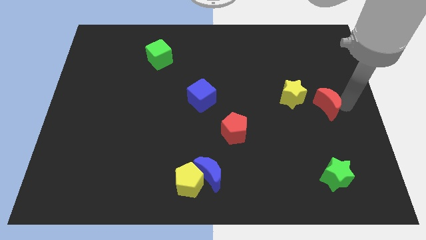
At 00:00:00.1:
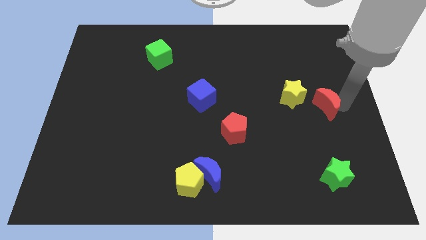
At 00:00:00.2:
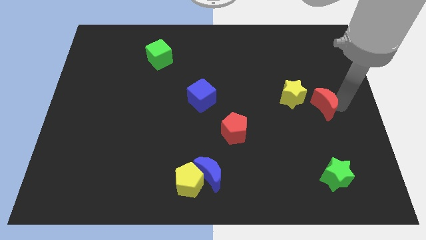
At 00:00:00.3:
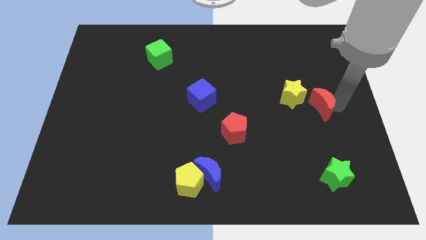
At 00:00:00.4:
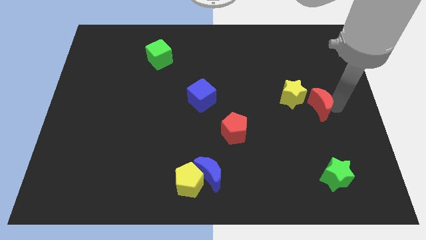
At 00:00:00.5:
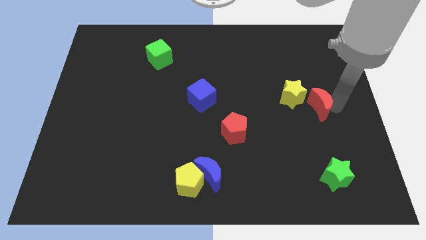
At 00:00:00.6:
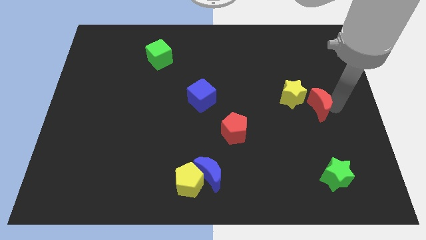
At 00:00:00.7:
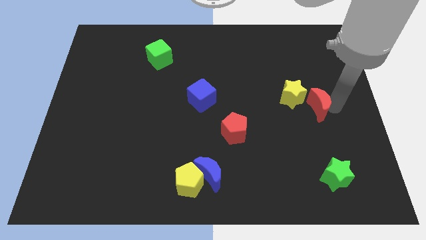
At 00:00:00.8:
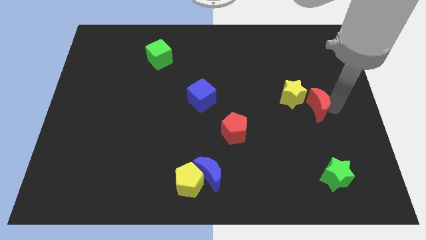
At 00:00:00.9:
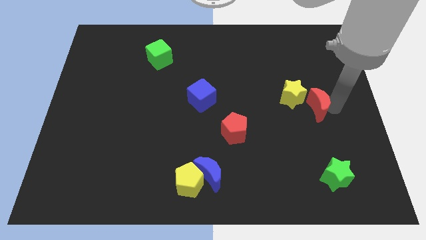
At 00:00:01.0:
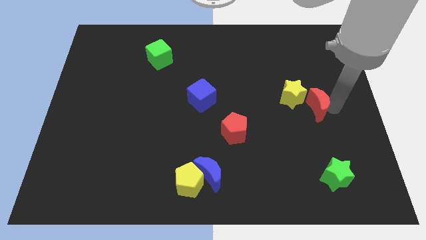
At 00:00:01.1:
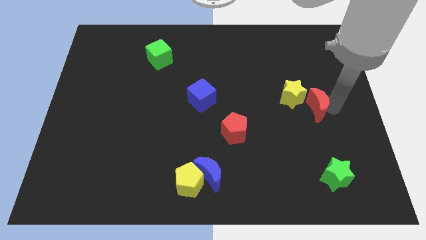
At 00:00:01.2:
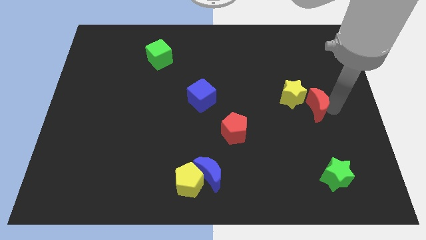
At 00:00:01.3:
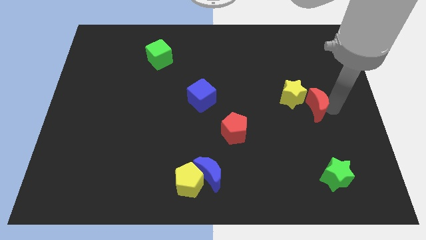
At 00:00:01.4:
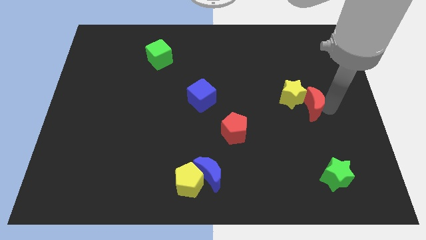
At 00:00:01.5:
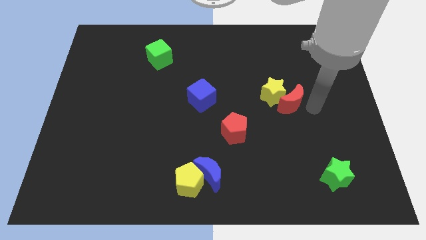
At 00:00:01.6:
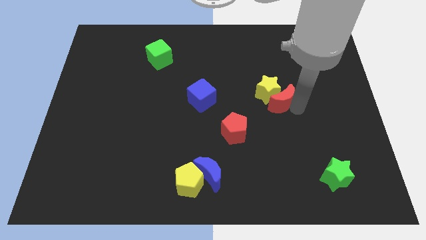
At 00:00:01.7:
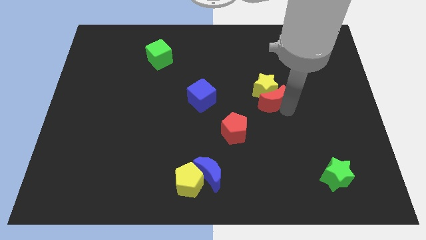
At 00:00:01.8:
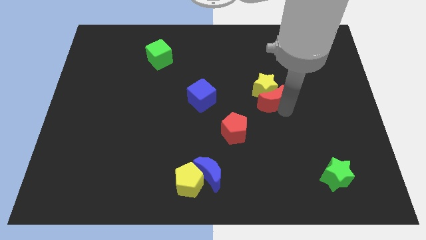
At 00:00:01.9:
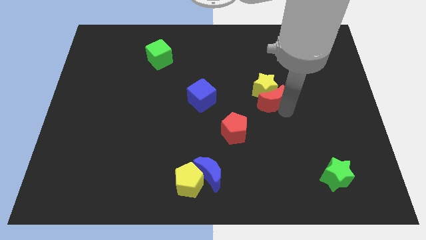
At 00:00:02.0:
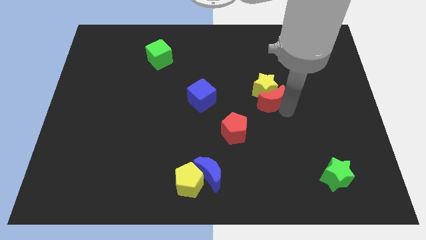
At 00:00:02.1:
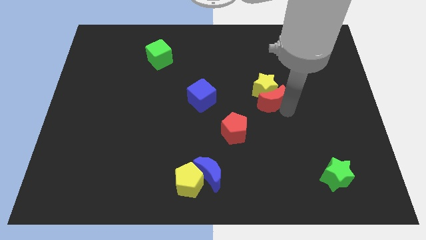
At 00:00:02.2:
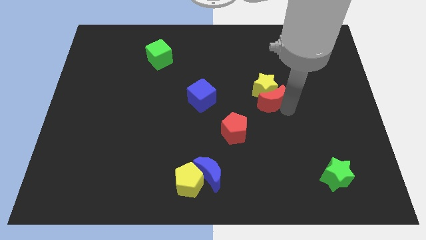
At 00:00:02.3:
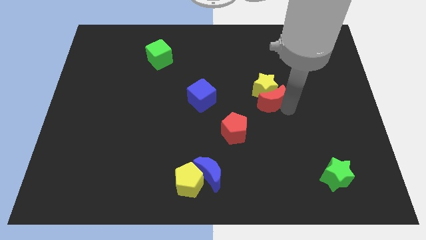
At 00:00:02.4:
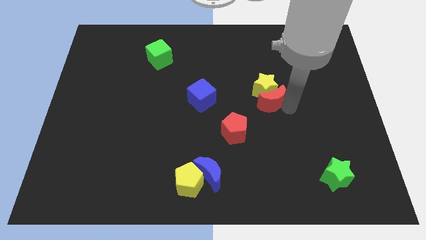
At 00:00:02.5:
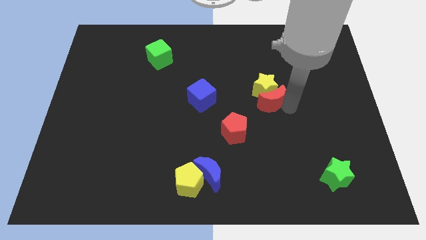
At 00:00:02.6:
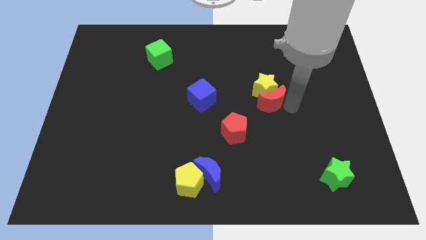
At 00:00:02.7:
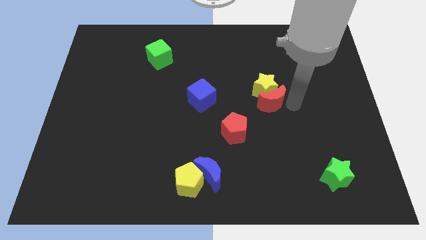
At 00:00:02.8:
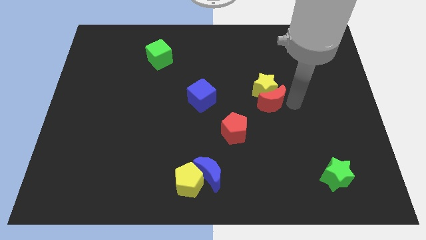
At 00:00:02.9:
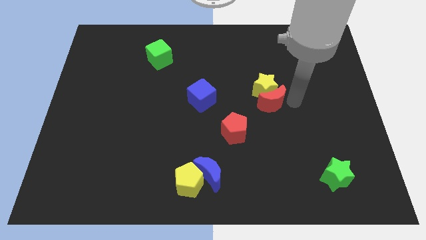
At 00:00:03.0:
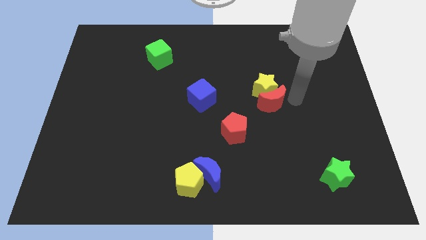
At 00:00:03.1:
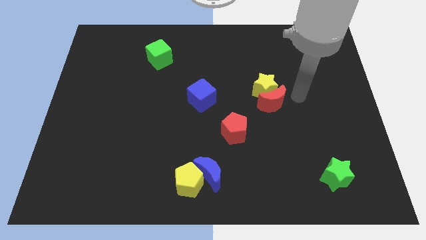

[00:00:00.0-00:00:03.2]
move the red crescent to the bottom of the yellow star

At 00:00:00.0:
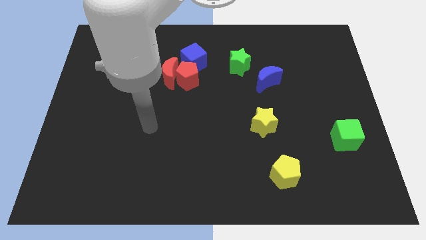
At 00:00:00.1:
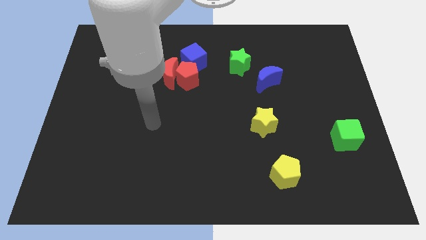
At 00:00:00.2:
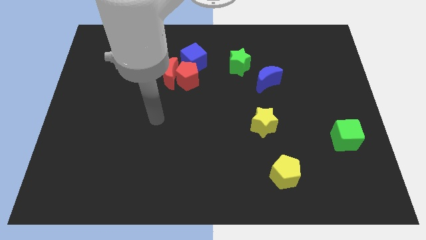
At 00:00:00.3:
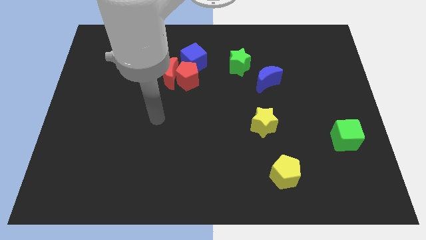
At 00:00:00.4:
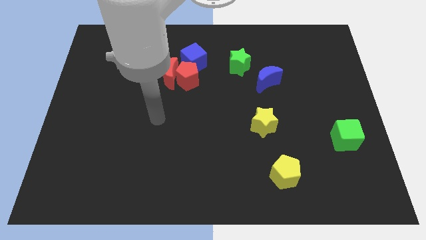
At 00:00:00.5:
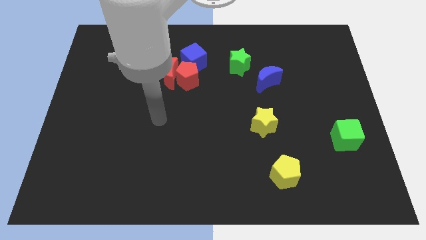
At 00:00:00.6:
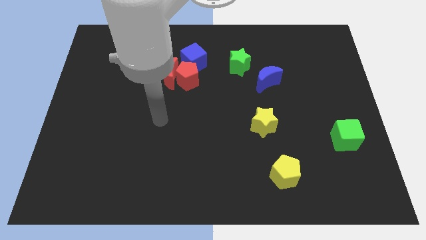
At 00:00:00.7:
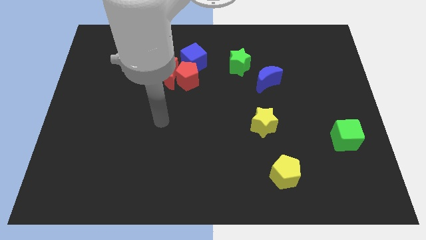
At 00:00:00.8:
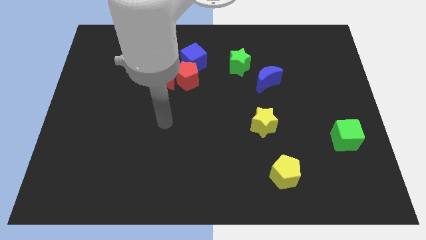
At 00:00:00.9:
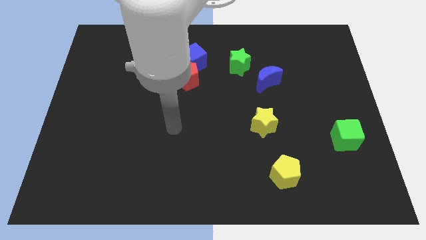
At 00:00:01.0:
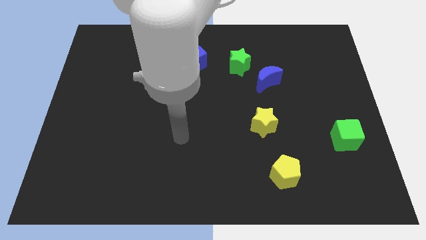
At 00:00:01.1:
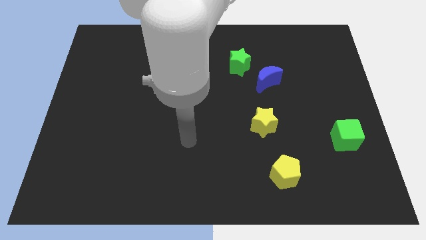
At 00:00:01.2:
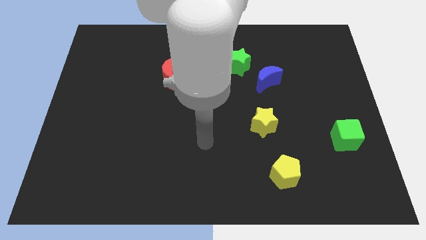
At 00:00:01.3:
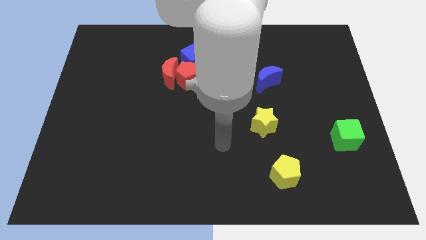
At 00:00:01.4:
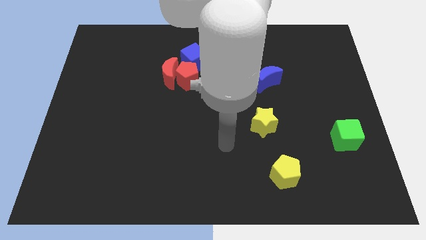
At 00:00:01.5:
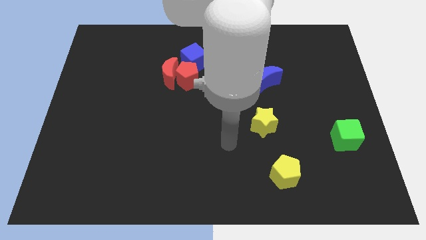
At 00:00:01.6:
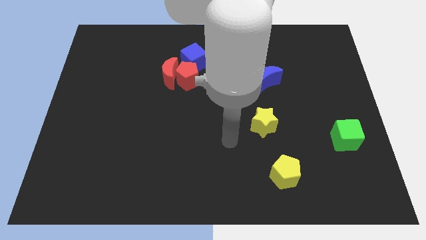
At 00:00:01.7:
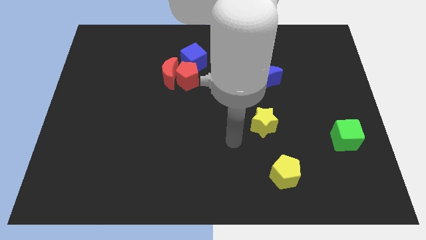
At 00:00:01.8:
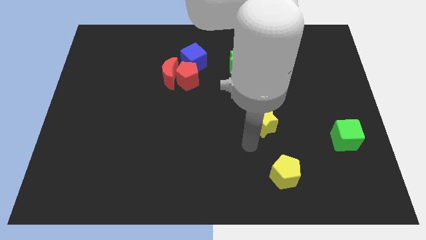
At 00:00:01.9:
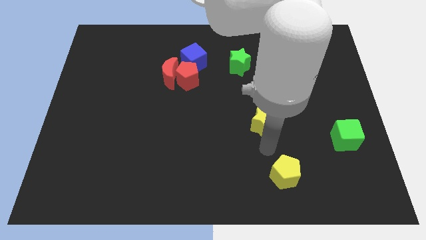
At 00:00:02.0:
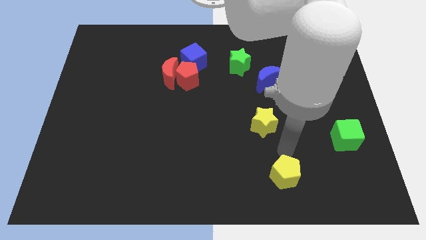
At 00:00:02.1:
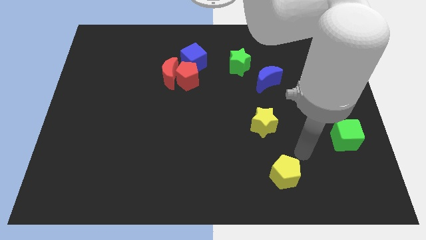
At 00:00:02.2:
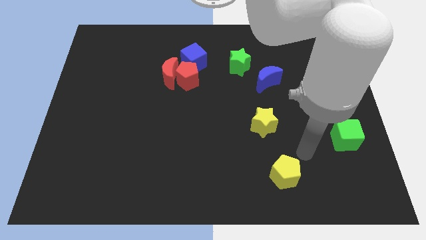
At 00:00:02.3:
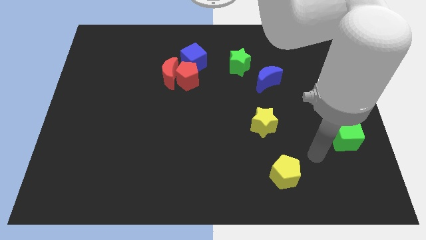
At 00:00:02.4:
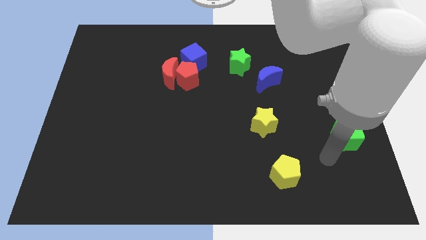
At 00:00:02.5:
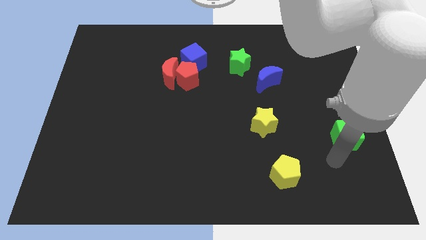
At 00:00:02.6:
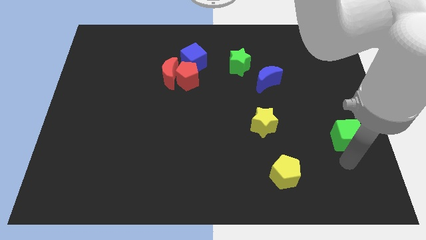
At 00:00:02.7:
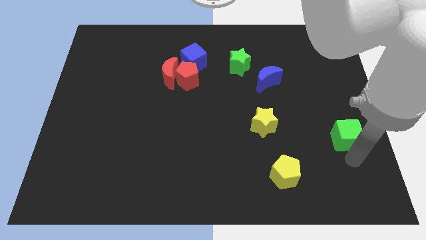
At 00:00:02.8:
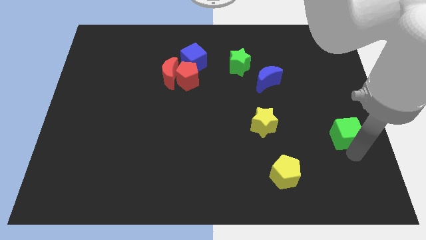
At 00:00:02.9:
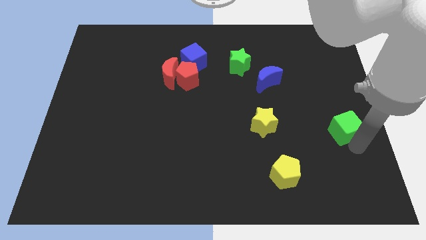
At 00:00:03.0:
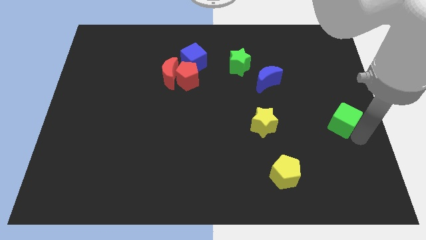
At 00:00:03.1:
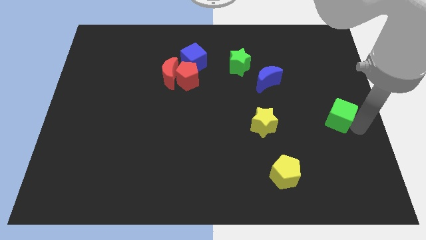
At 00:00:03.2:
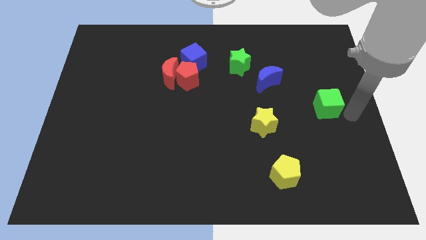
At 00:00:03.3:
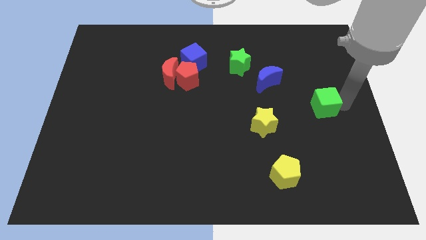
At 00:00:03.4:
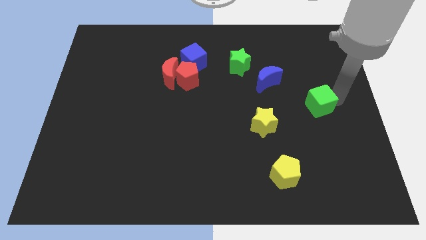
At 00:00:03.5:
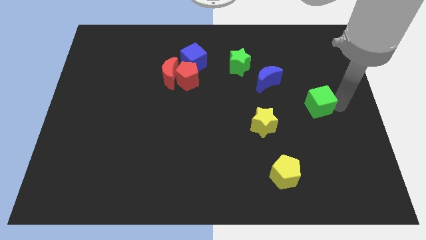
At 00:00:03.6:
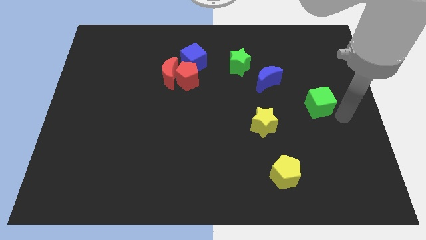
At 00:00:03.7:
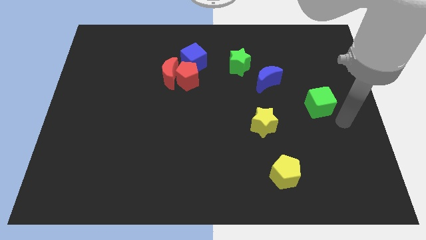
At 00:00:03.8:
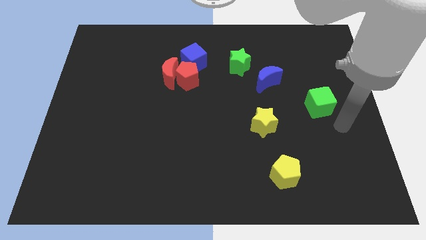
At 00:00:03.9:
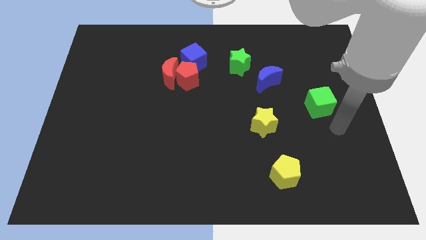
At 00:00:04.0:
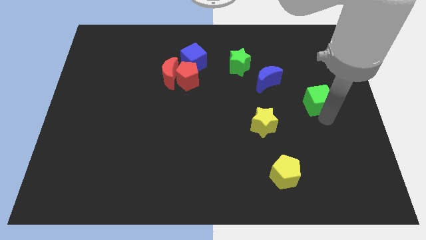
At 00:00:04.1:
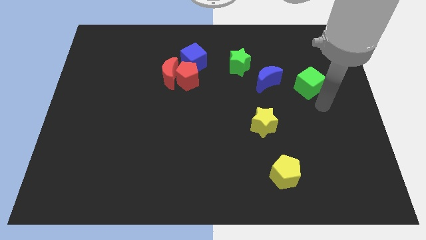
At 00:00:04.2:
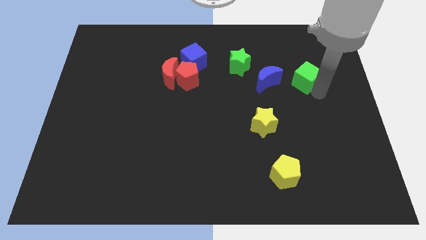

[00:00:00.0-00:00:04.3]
push the green cube to the right of the blue crescent

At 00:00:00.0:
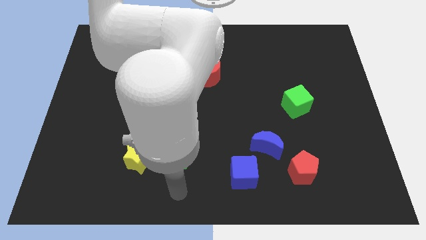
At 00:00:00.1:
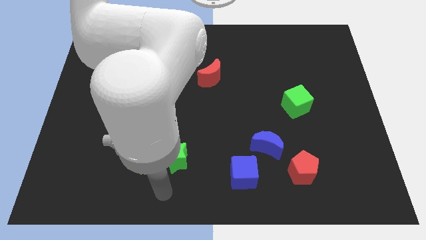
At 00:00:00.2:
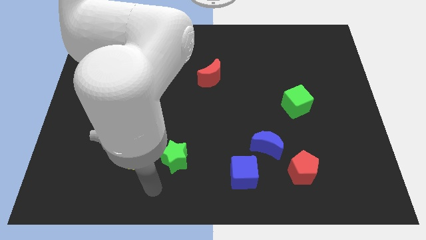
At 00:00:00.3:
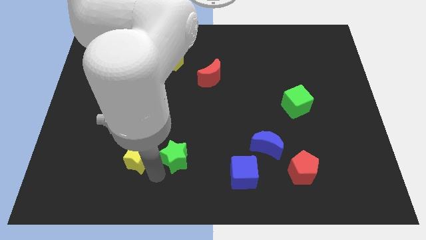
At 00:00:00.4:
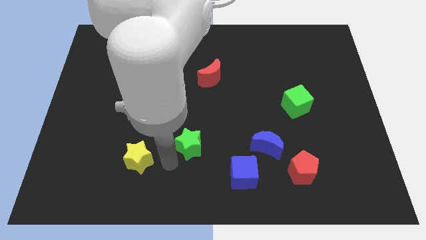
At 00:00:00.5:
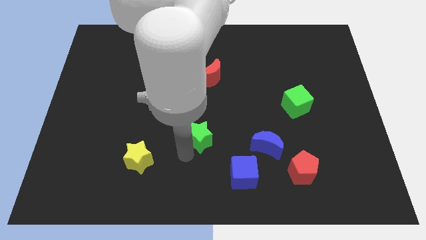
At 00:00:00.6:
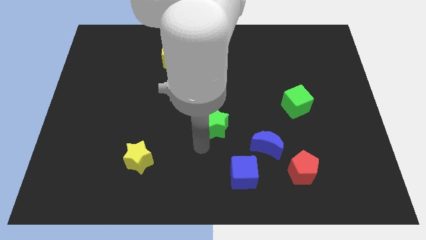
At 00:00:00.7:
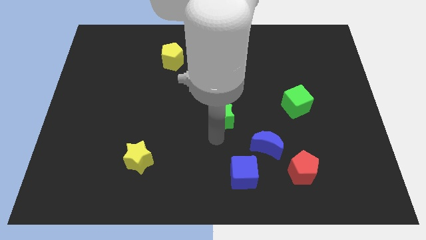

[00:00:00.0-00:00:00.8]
move green star diagonally upwards

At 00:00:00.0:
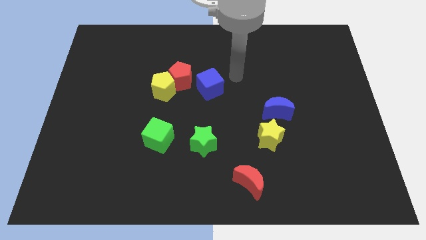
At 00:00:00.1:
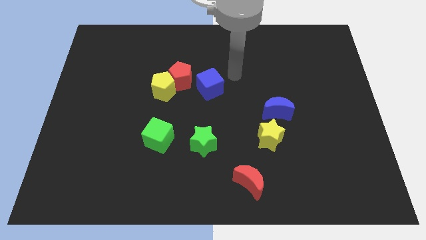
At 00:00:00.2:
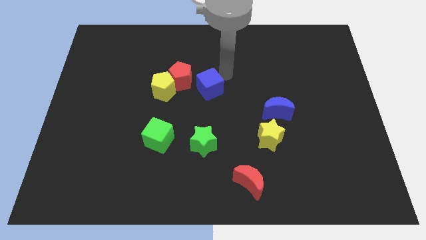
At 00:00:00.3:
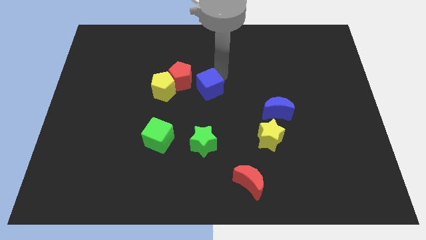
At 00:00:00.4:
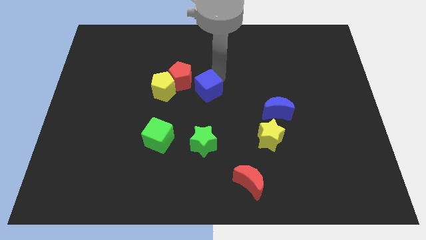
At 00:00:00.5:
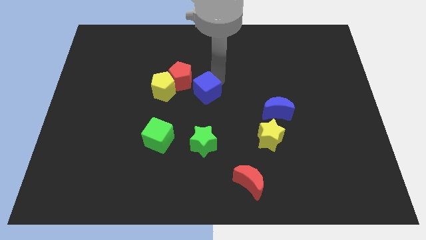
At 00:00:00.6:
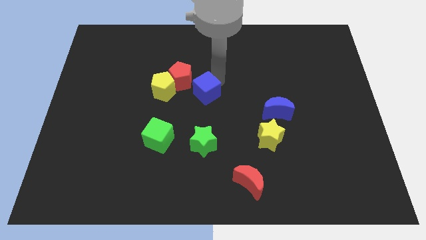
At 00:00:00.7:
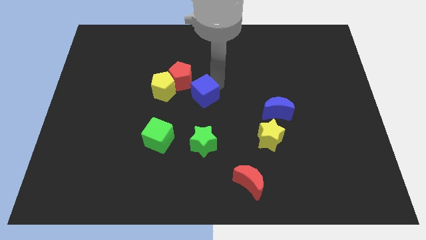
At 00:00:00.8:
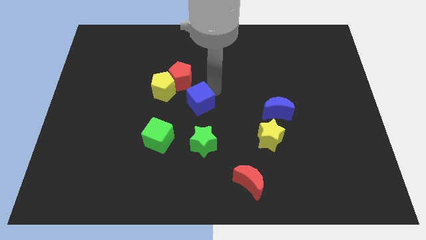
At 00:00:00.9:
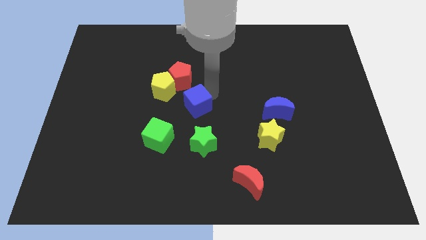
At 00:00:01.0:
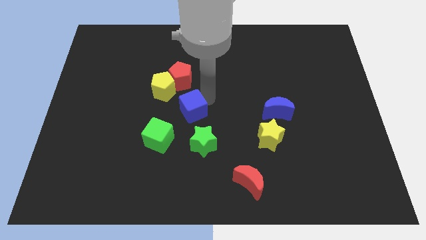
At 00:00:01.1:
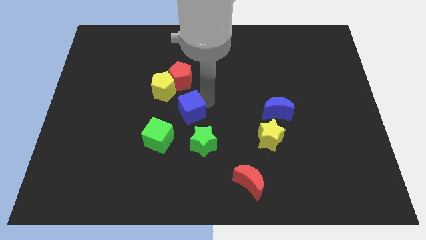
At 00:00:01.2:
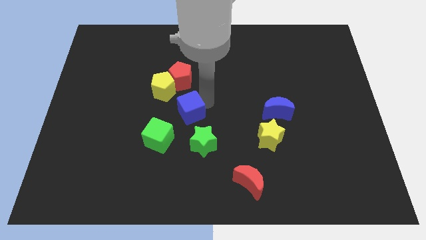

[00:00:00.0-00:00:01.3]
place the blue cube towards green cube
